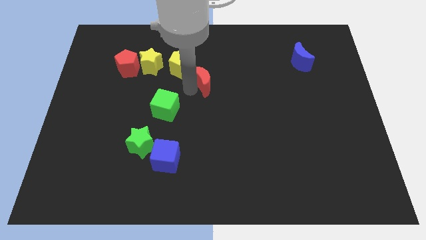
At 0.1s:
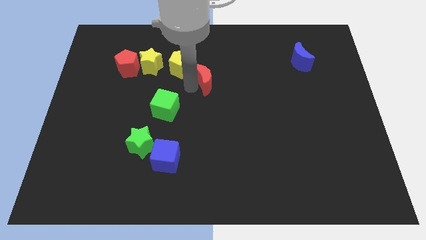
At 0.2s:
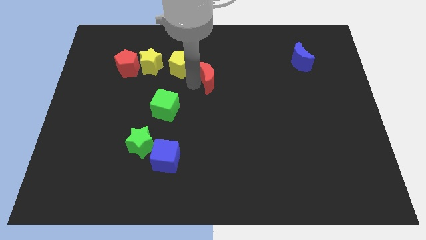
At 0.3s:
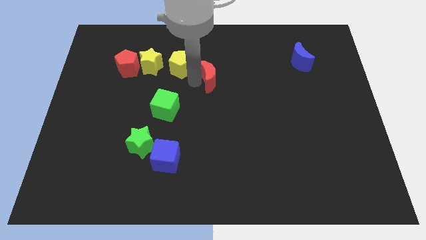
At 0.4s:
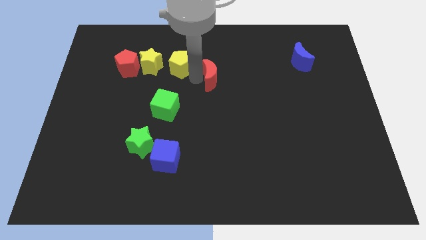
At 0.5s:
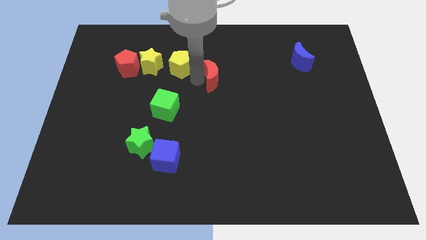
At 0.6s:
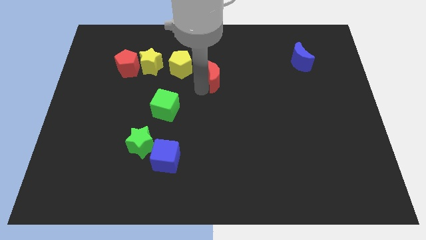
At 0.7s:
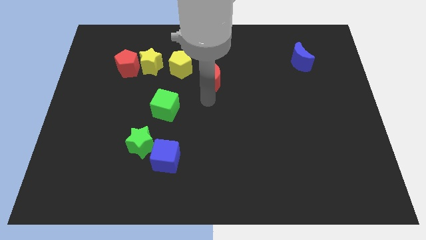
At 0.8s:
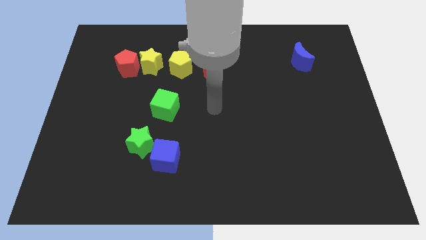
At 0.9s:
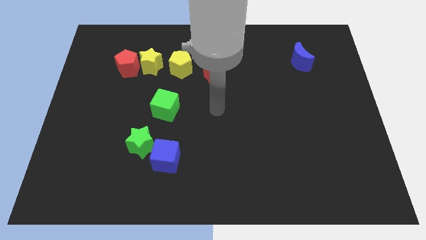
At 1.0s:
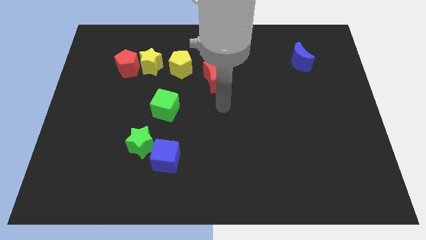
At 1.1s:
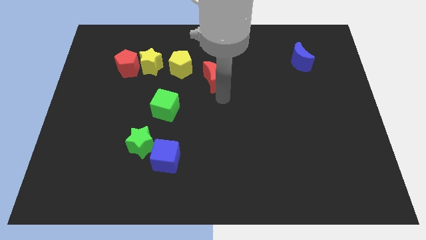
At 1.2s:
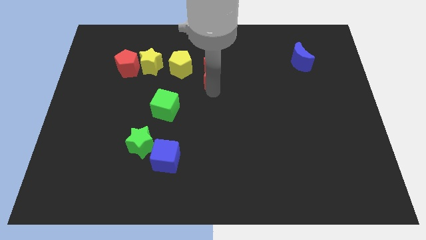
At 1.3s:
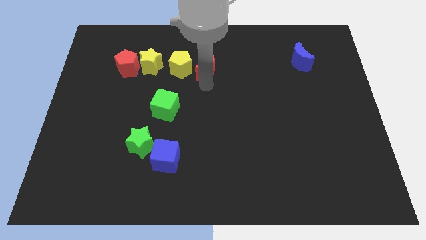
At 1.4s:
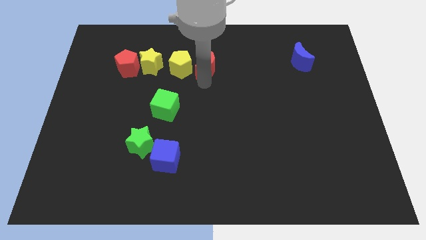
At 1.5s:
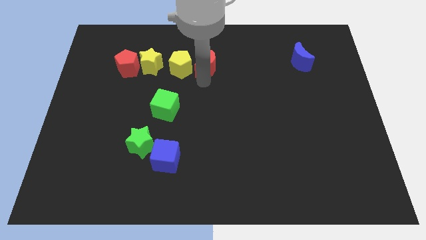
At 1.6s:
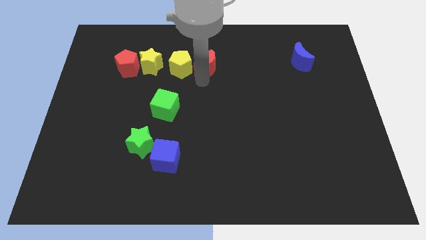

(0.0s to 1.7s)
move the red crescent to the right of the yellow pentagon

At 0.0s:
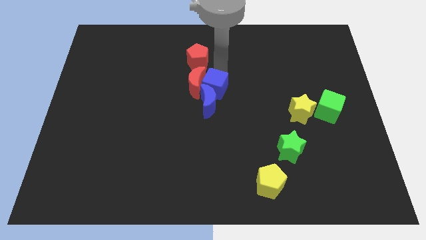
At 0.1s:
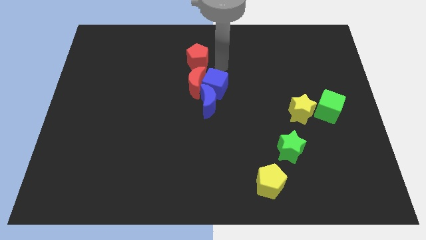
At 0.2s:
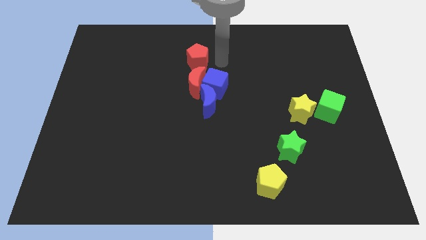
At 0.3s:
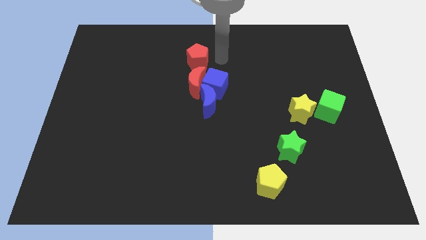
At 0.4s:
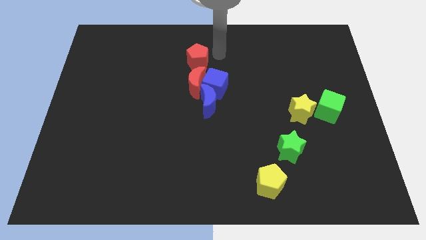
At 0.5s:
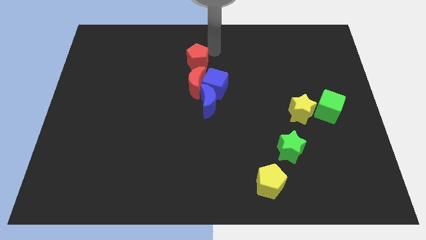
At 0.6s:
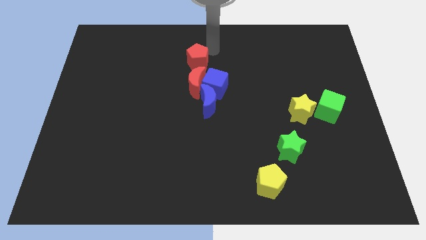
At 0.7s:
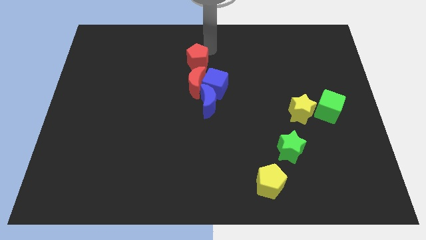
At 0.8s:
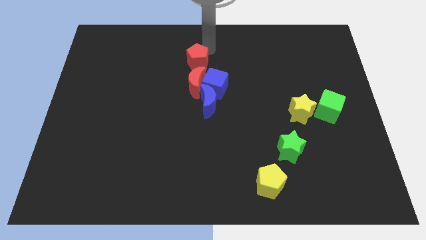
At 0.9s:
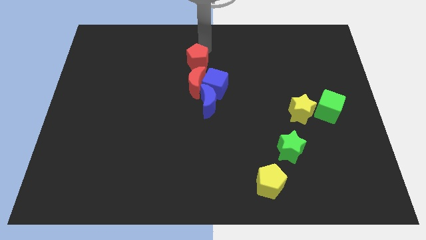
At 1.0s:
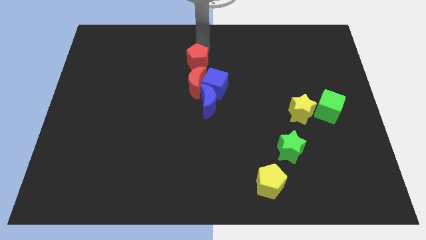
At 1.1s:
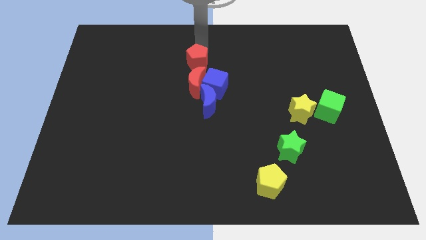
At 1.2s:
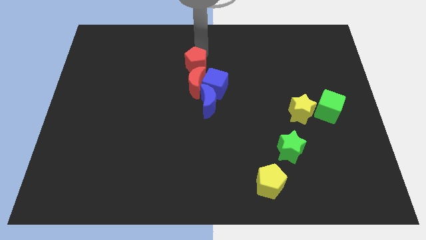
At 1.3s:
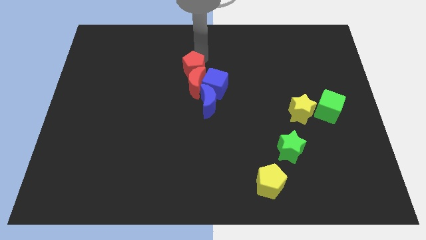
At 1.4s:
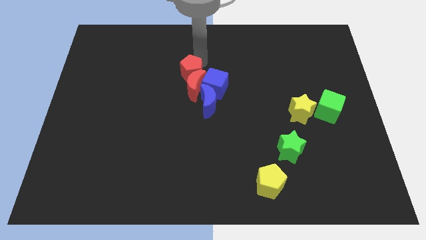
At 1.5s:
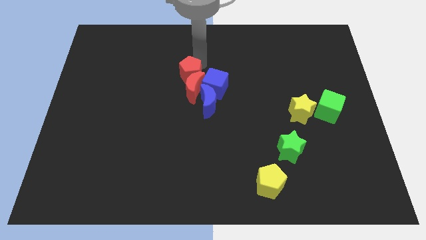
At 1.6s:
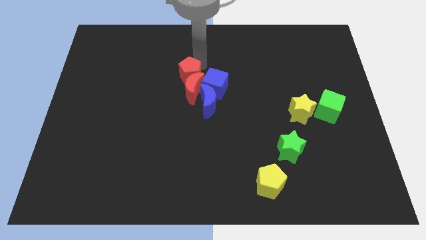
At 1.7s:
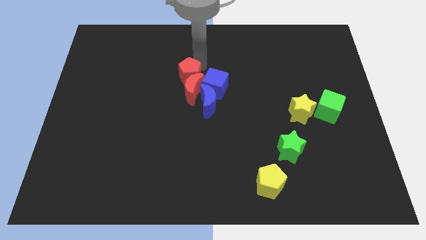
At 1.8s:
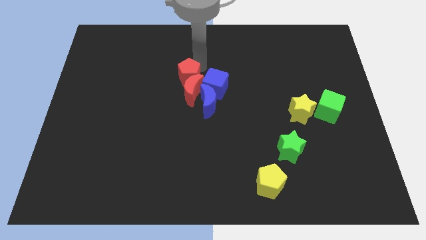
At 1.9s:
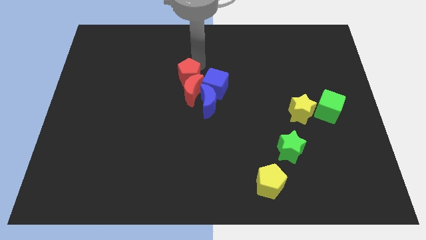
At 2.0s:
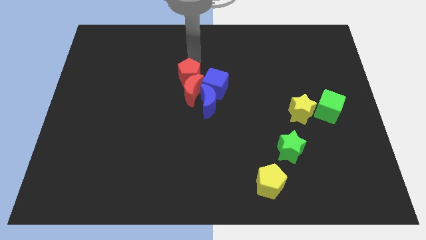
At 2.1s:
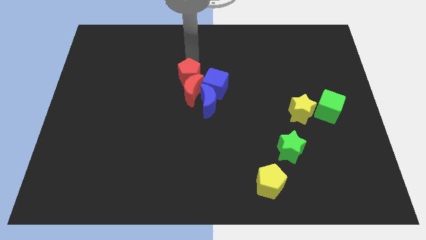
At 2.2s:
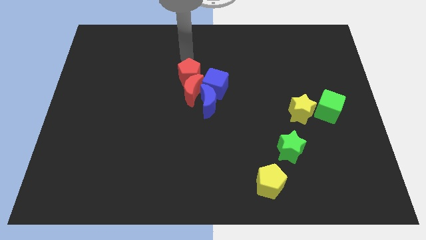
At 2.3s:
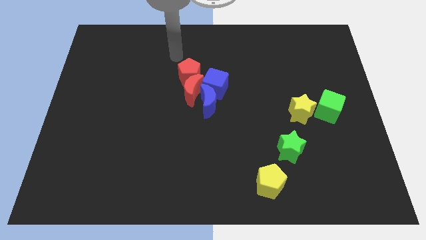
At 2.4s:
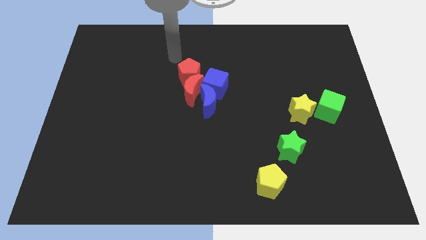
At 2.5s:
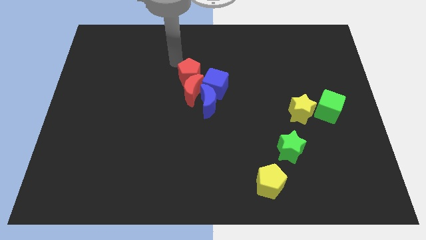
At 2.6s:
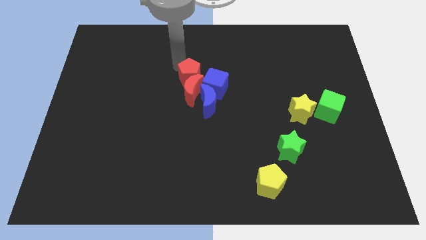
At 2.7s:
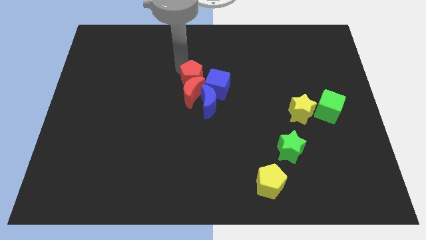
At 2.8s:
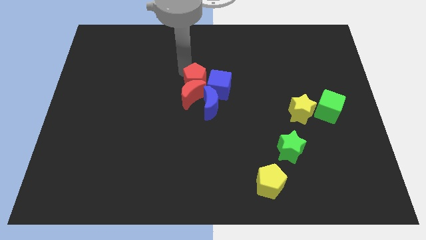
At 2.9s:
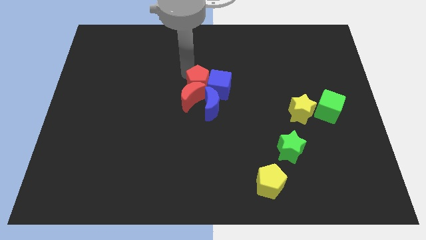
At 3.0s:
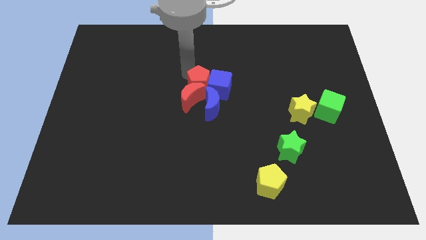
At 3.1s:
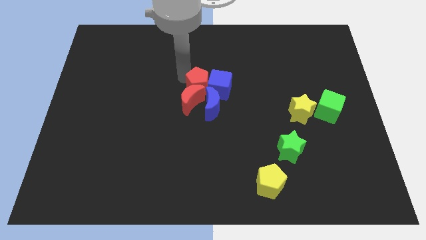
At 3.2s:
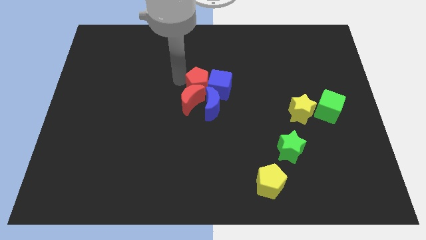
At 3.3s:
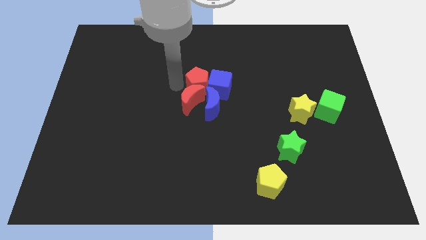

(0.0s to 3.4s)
push the red pentagon into the red moon

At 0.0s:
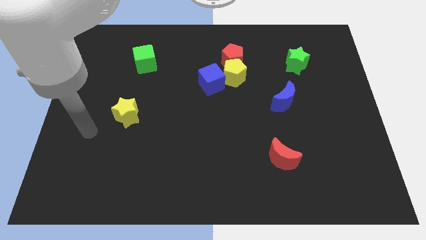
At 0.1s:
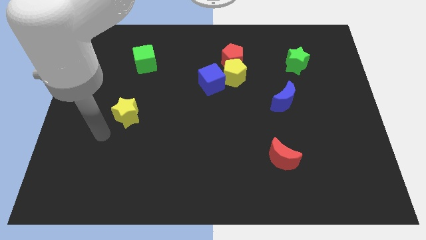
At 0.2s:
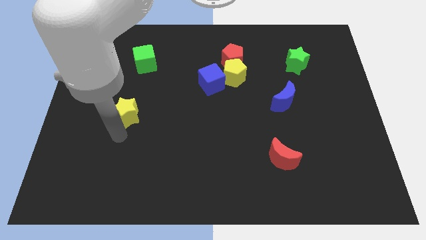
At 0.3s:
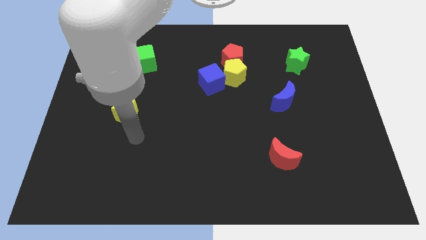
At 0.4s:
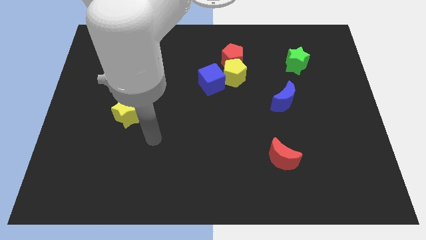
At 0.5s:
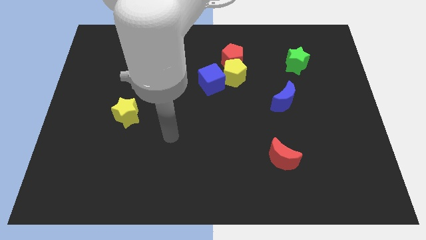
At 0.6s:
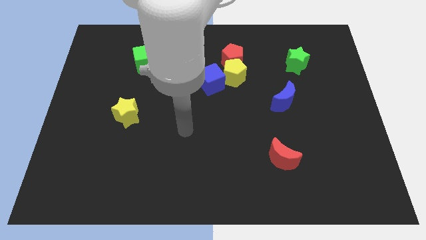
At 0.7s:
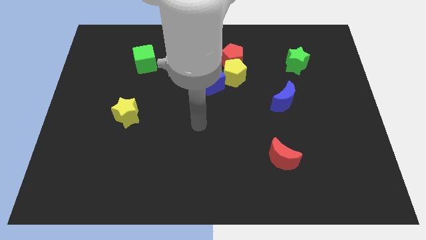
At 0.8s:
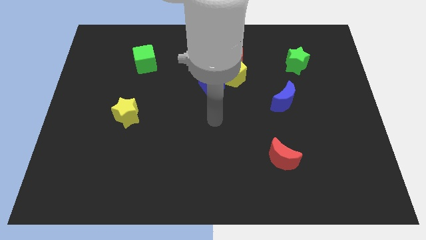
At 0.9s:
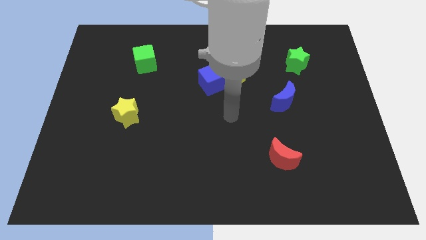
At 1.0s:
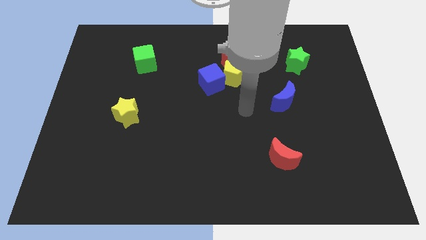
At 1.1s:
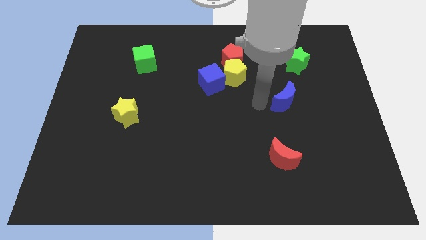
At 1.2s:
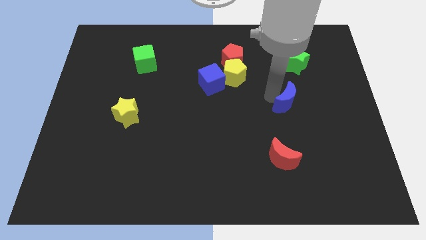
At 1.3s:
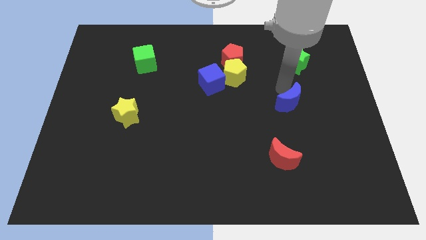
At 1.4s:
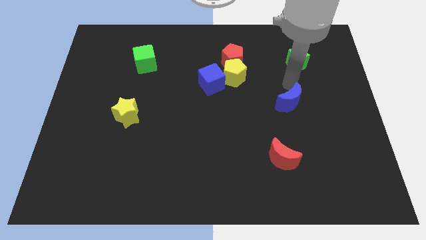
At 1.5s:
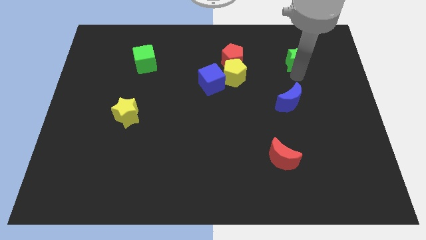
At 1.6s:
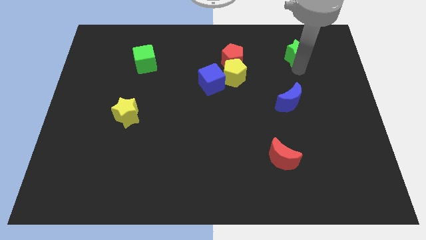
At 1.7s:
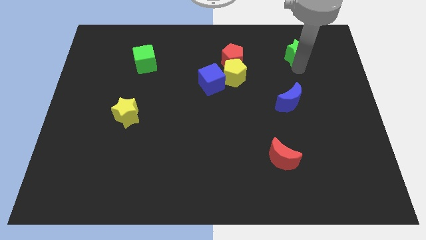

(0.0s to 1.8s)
place the arm below the green star

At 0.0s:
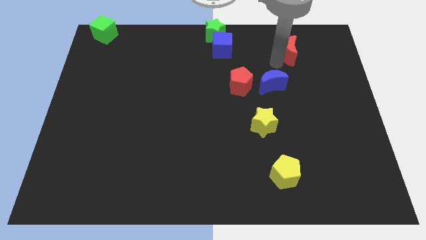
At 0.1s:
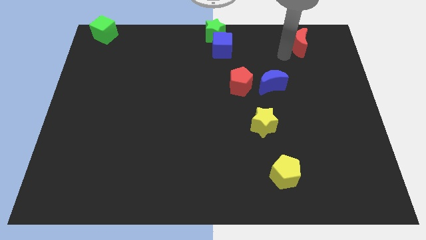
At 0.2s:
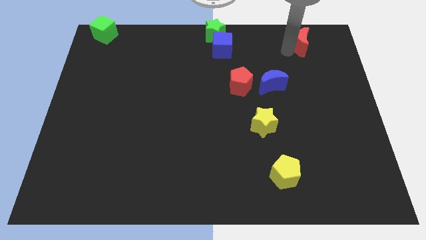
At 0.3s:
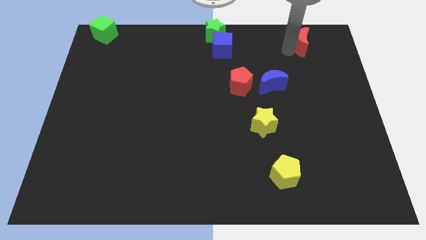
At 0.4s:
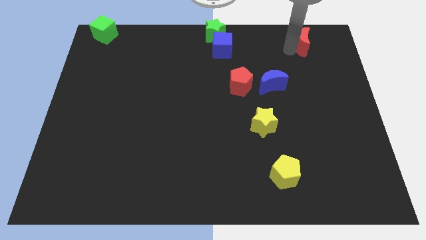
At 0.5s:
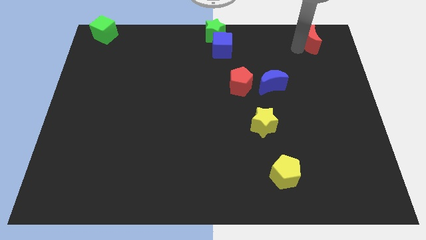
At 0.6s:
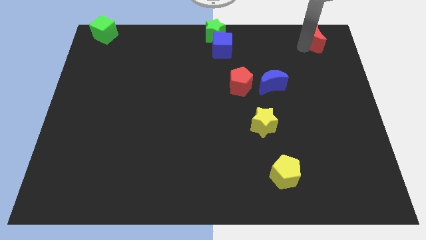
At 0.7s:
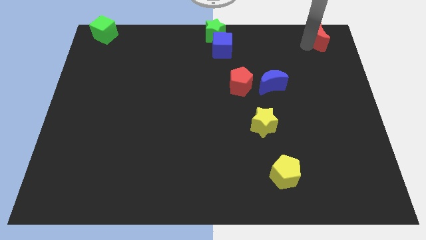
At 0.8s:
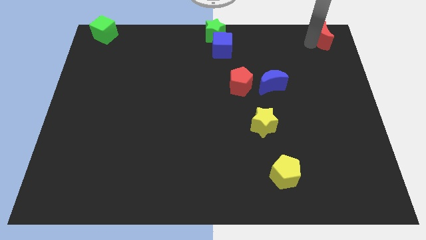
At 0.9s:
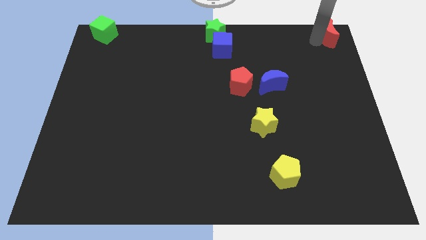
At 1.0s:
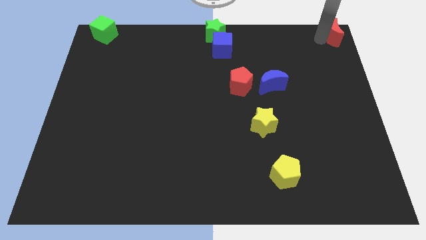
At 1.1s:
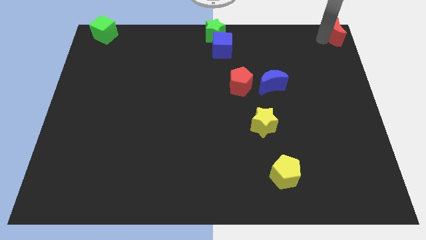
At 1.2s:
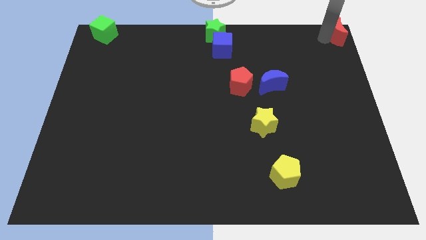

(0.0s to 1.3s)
move the red crescent towards the top right corner of the board

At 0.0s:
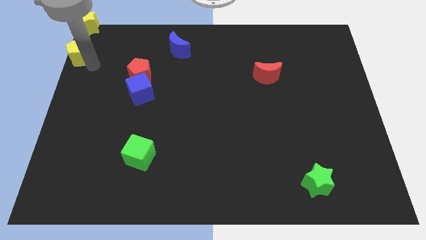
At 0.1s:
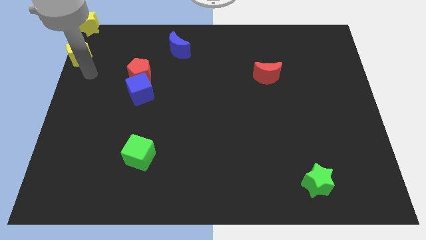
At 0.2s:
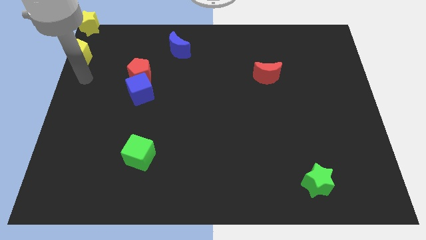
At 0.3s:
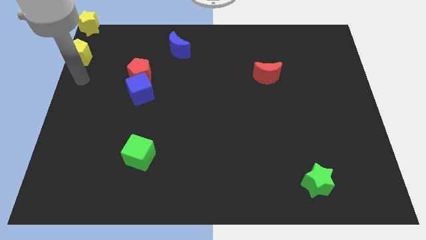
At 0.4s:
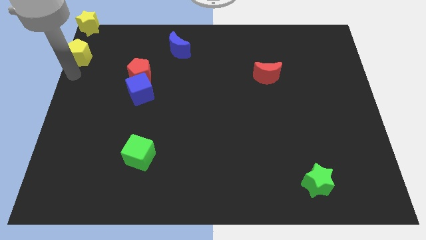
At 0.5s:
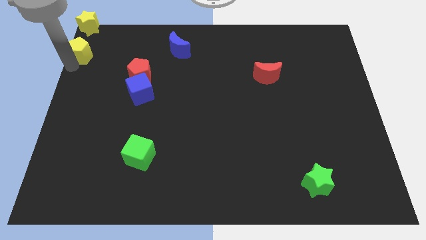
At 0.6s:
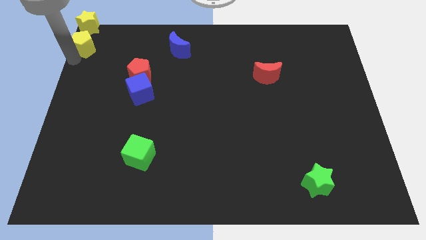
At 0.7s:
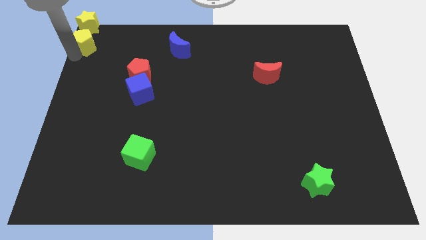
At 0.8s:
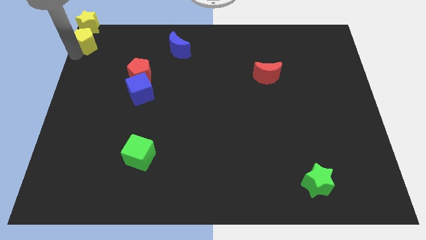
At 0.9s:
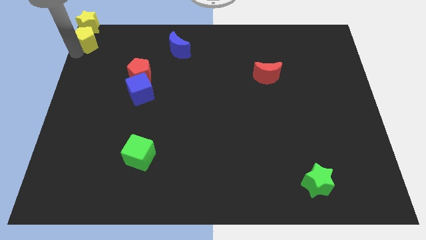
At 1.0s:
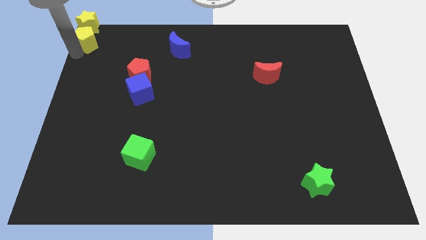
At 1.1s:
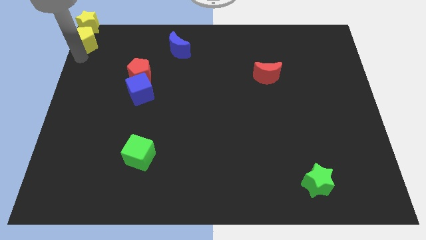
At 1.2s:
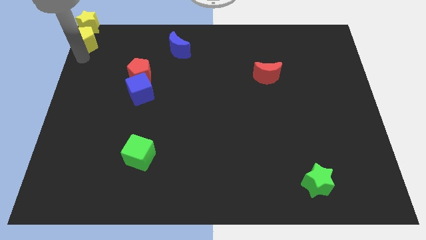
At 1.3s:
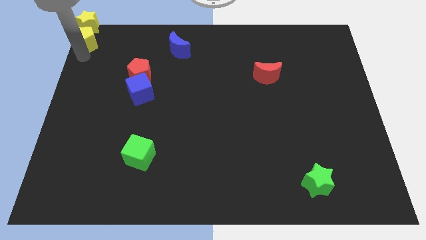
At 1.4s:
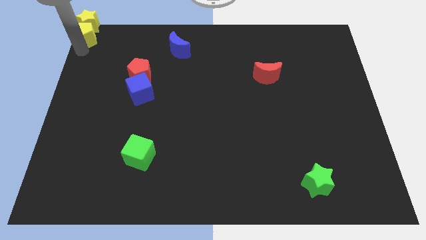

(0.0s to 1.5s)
place the yellow pentagon below the yellow star
